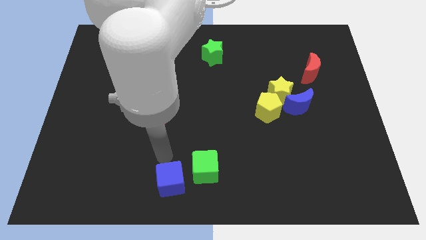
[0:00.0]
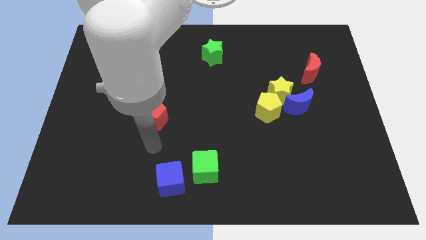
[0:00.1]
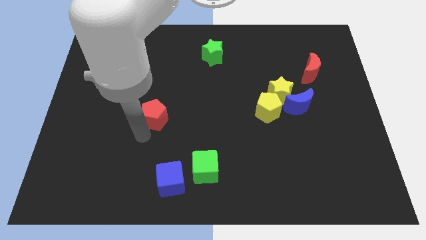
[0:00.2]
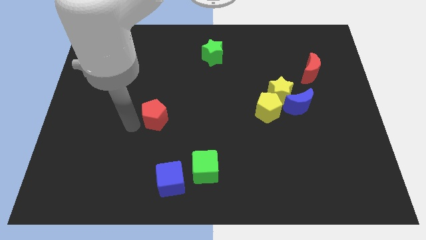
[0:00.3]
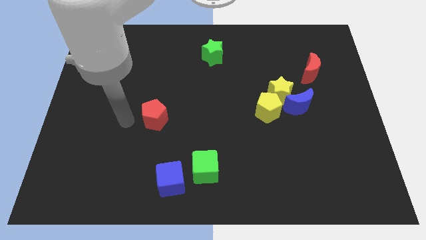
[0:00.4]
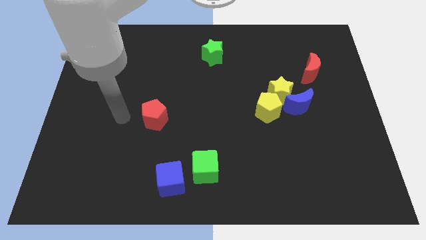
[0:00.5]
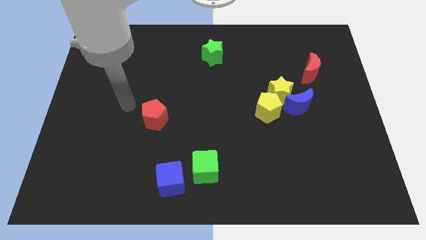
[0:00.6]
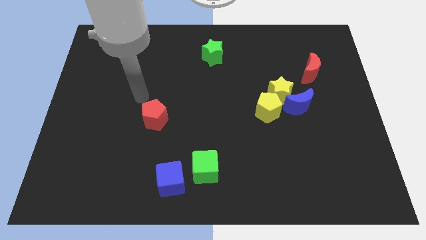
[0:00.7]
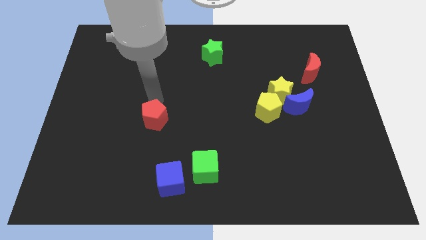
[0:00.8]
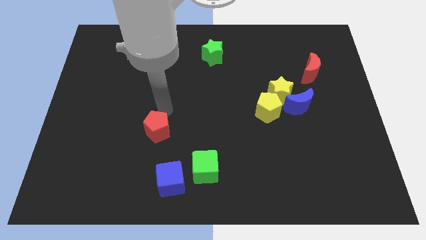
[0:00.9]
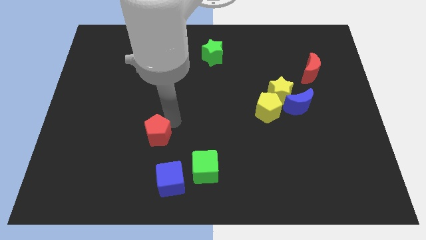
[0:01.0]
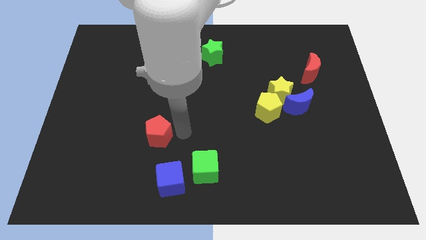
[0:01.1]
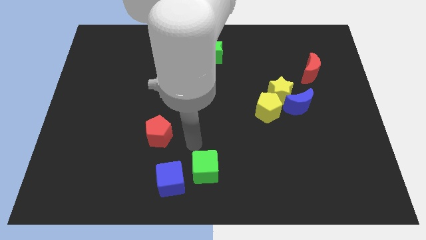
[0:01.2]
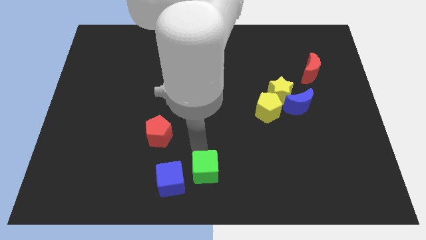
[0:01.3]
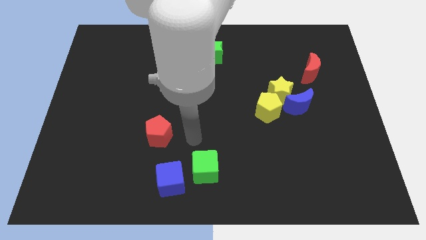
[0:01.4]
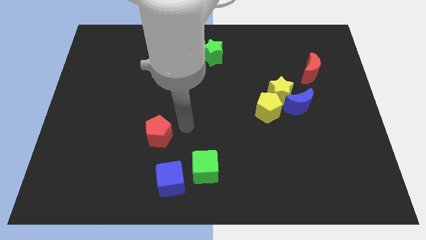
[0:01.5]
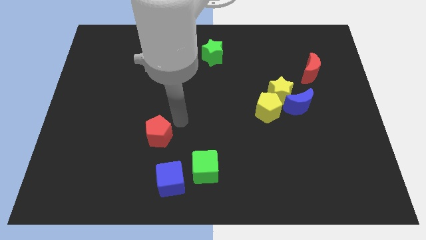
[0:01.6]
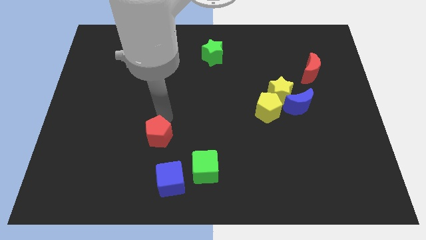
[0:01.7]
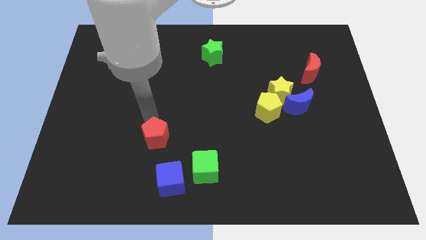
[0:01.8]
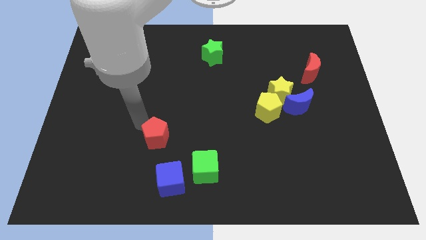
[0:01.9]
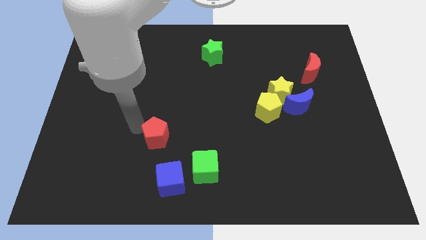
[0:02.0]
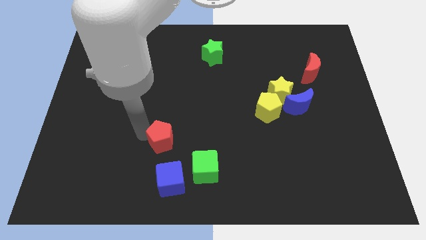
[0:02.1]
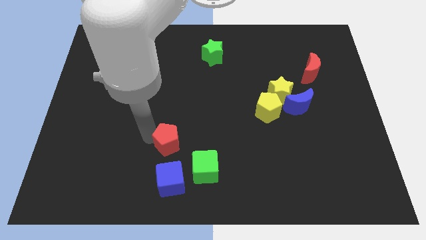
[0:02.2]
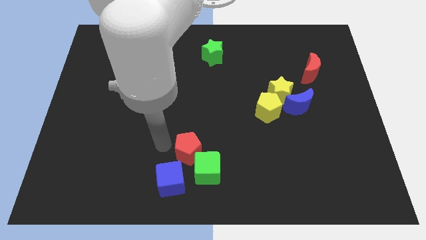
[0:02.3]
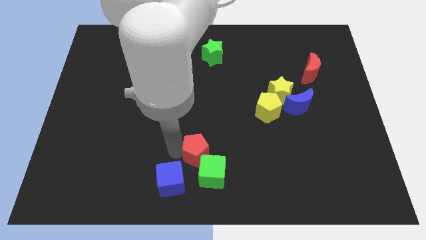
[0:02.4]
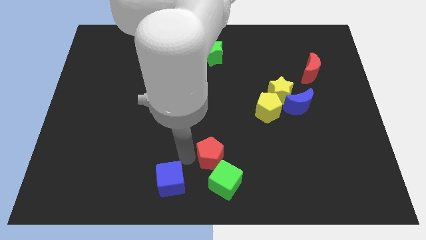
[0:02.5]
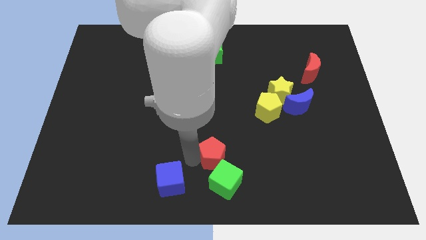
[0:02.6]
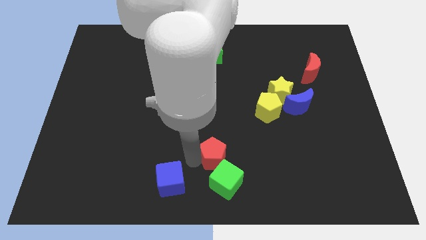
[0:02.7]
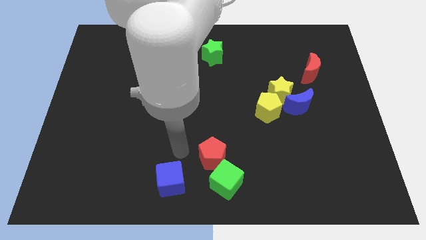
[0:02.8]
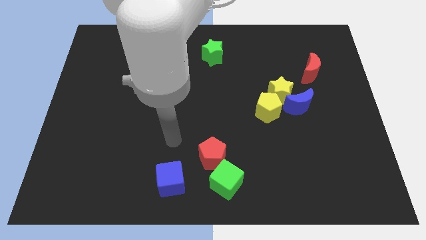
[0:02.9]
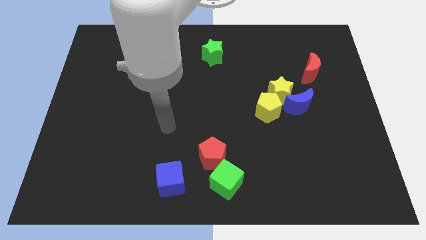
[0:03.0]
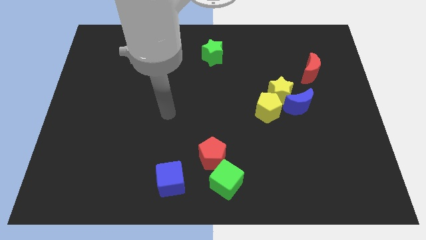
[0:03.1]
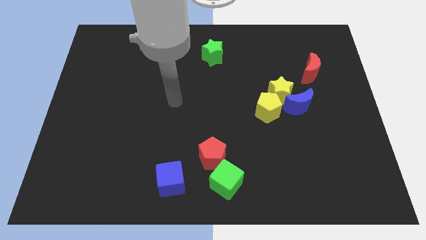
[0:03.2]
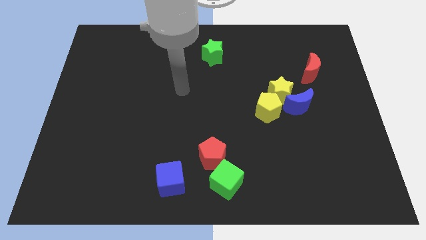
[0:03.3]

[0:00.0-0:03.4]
push red pentagon in to green cube

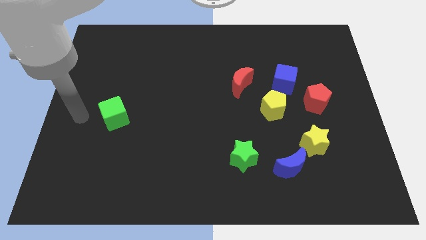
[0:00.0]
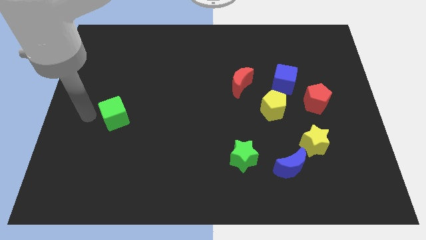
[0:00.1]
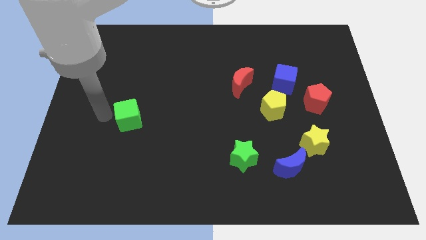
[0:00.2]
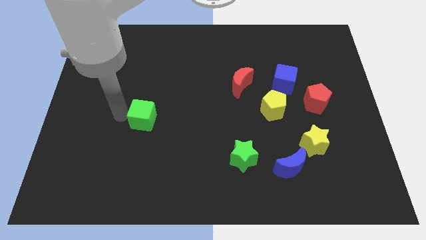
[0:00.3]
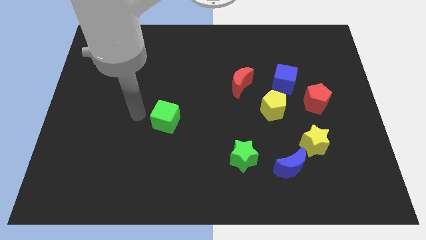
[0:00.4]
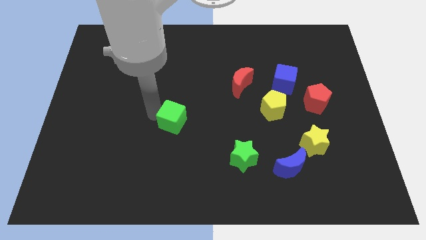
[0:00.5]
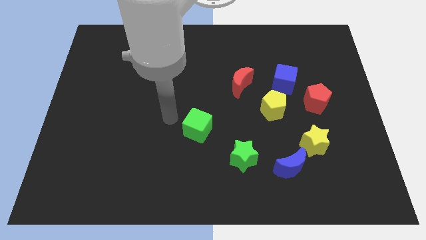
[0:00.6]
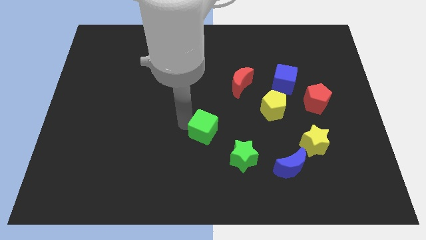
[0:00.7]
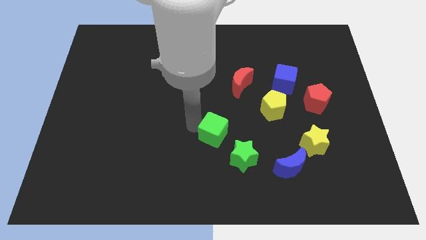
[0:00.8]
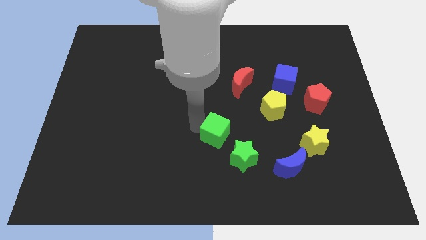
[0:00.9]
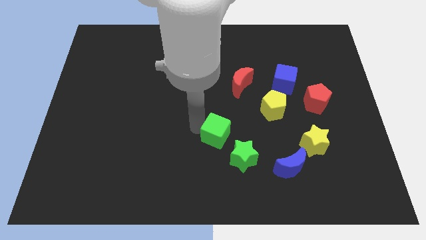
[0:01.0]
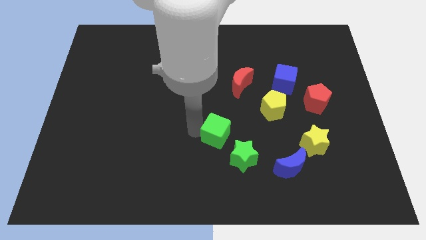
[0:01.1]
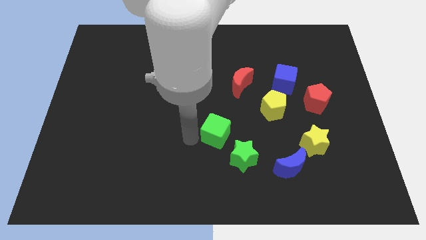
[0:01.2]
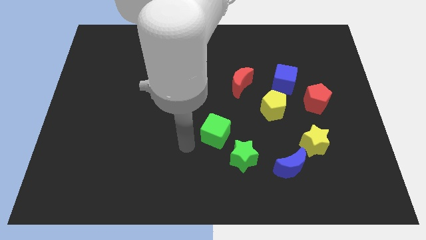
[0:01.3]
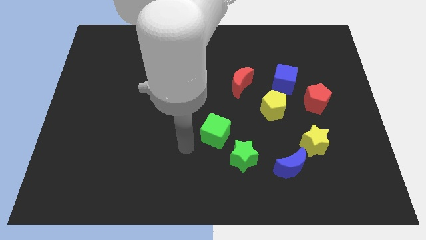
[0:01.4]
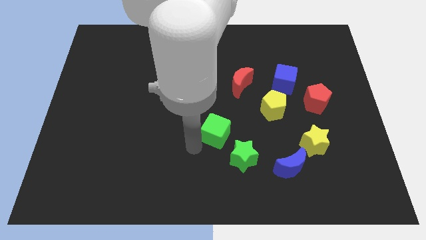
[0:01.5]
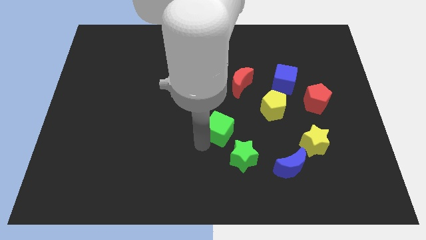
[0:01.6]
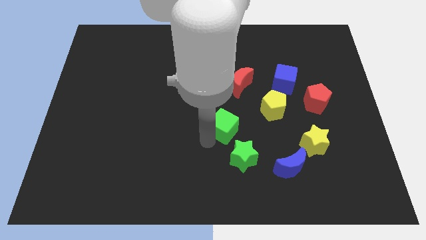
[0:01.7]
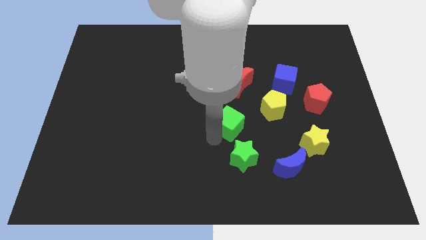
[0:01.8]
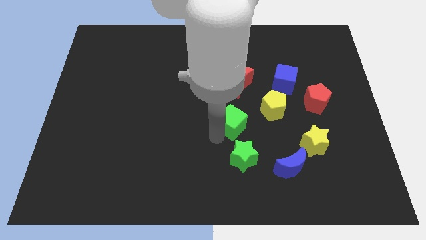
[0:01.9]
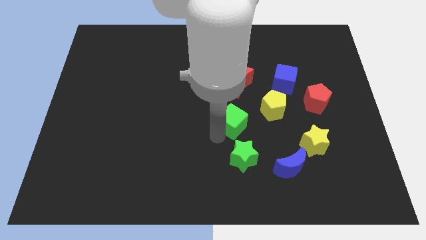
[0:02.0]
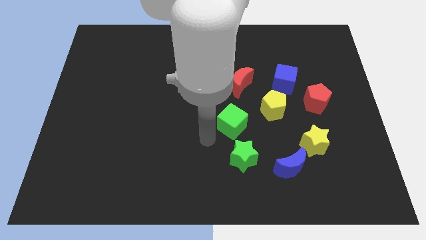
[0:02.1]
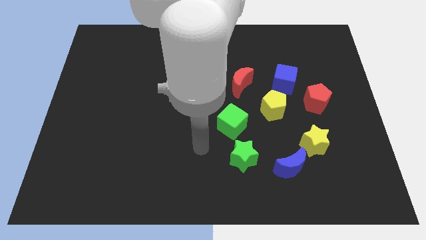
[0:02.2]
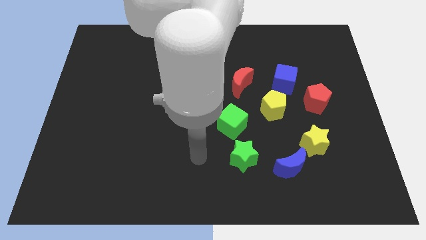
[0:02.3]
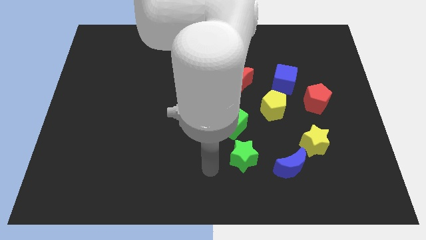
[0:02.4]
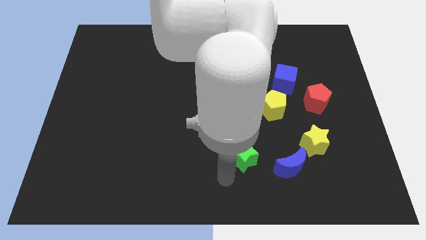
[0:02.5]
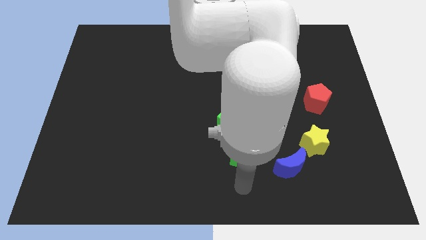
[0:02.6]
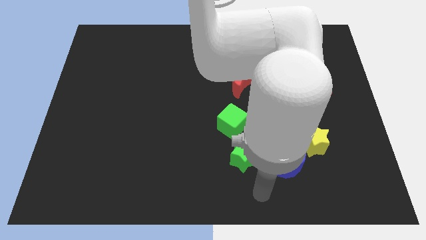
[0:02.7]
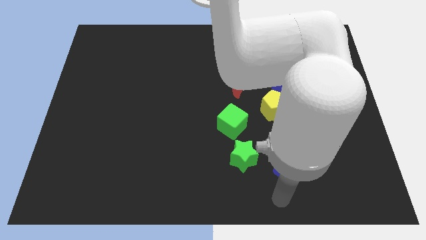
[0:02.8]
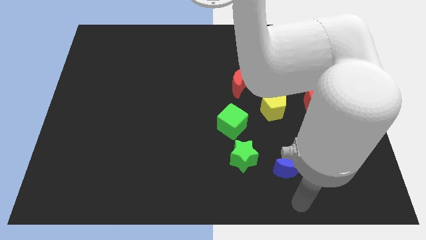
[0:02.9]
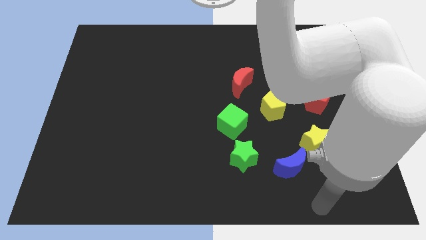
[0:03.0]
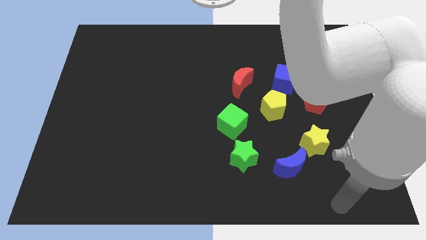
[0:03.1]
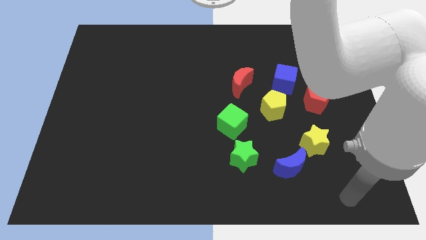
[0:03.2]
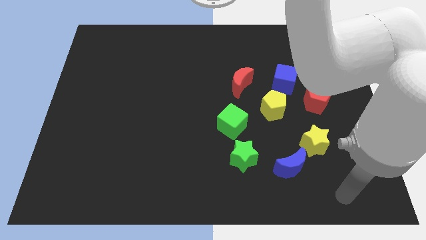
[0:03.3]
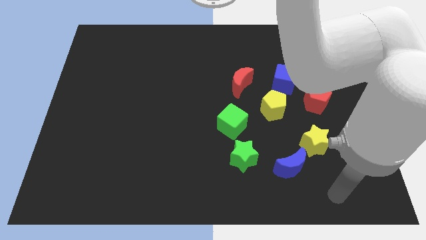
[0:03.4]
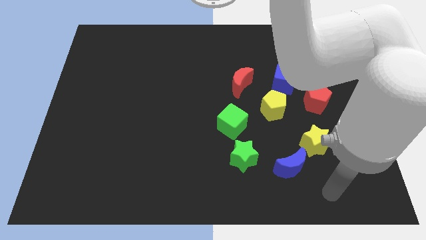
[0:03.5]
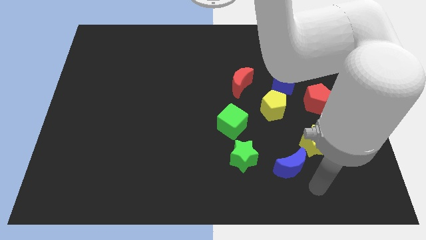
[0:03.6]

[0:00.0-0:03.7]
place the green cube in between the red moon and green star

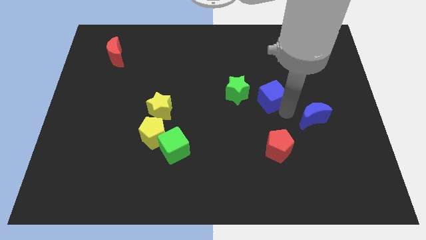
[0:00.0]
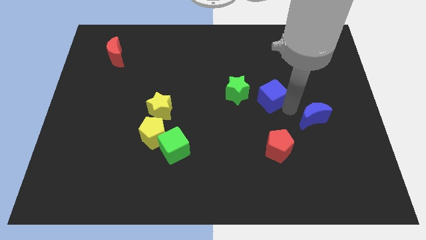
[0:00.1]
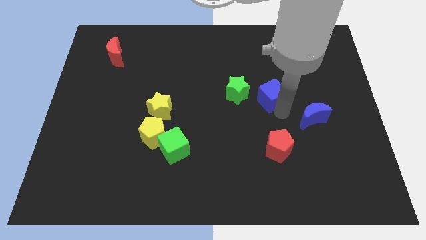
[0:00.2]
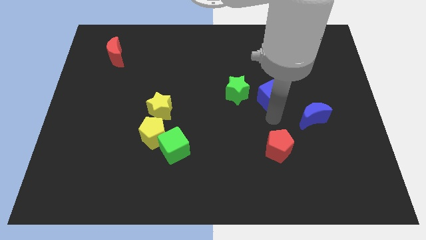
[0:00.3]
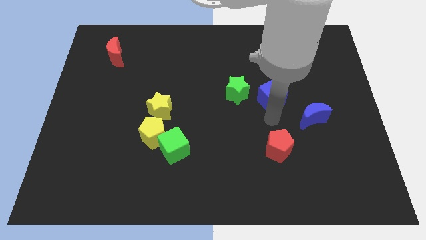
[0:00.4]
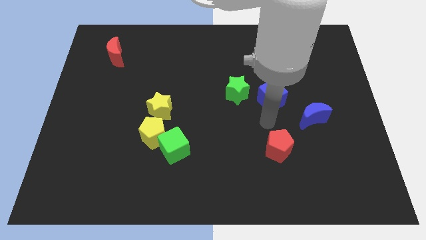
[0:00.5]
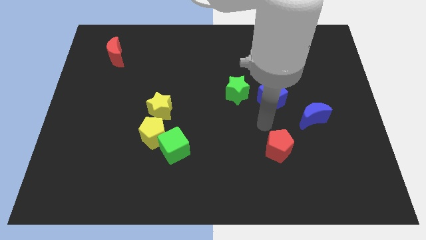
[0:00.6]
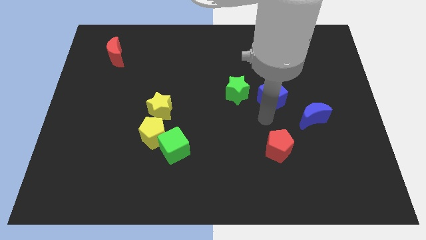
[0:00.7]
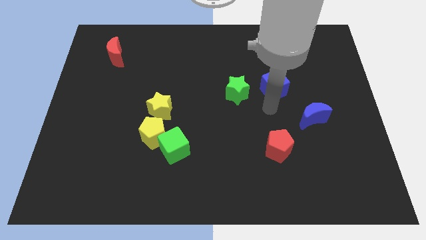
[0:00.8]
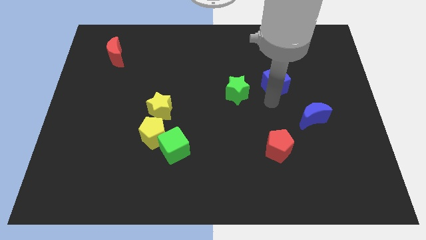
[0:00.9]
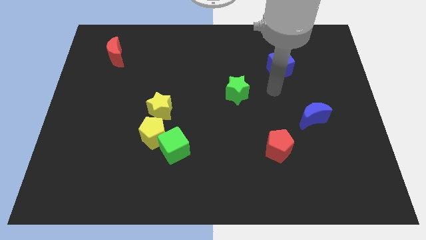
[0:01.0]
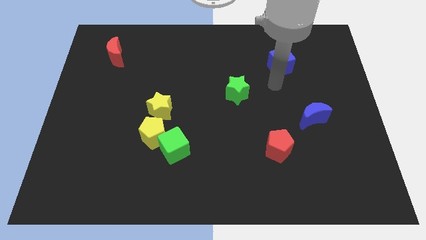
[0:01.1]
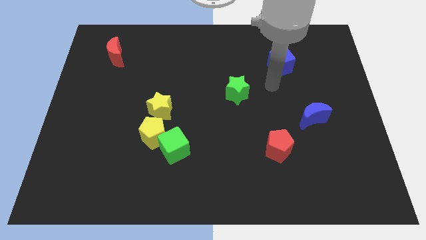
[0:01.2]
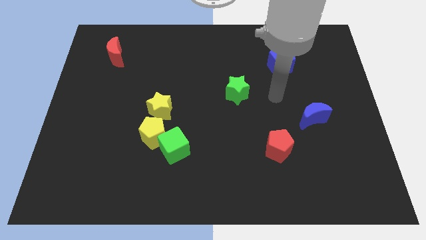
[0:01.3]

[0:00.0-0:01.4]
push blue cube towards top

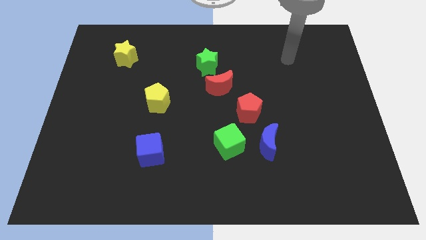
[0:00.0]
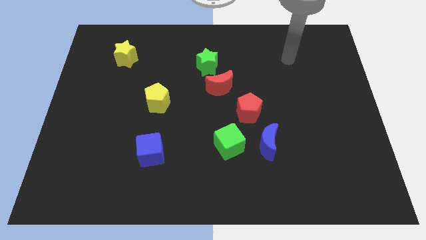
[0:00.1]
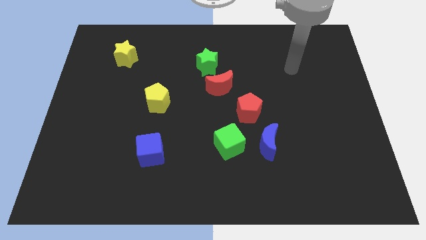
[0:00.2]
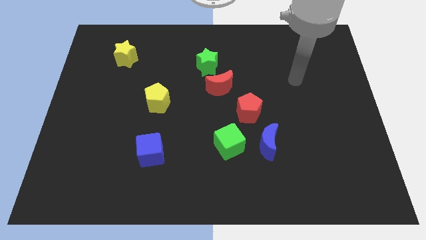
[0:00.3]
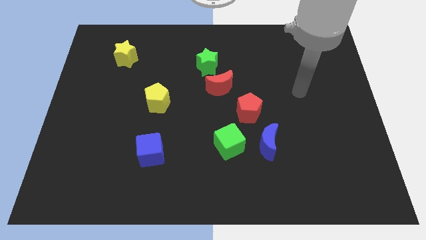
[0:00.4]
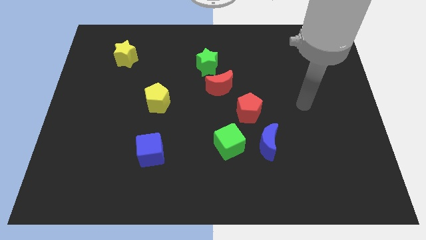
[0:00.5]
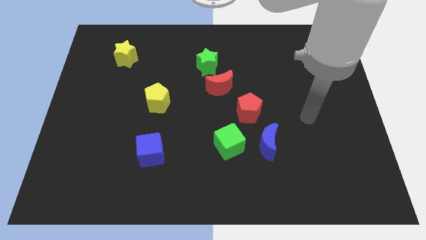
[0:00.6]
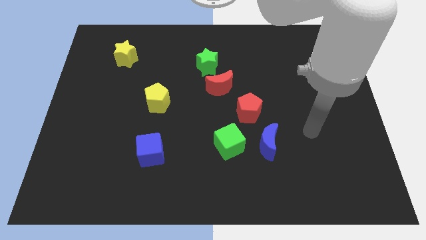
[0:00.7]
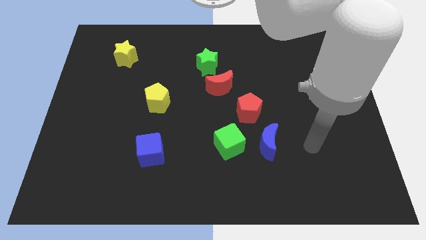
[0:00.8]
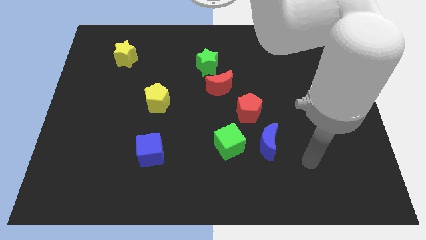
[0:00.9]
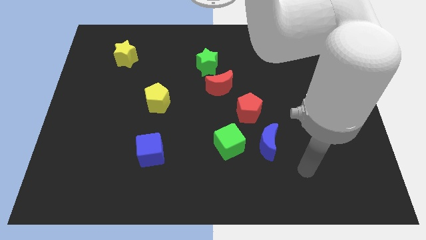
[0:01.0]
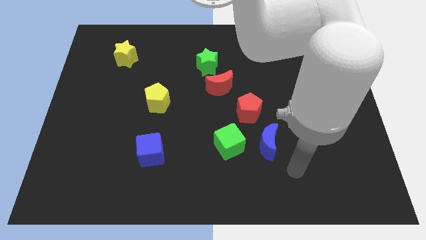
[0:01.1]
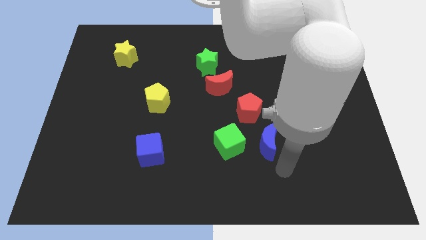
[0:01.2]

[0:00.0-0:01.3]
point your arm at the bottom right side of blue moon
